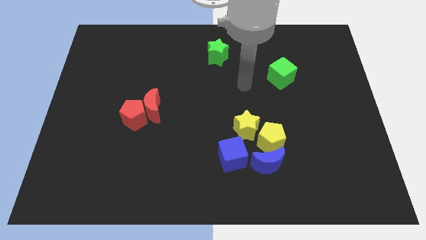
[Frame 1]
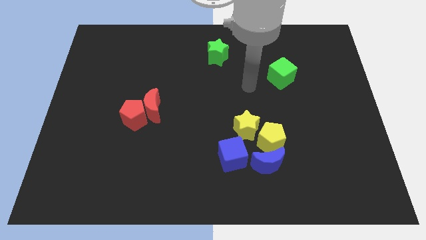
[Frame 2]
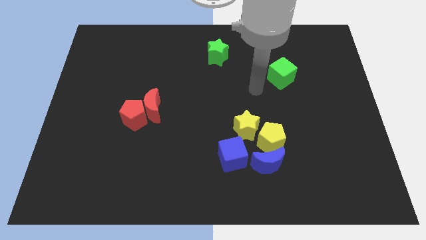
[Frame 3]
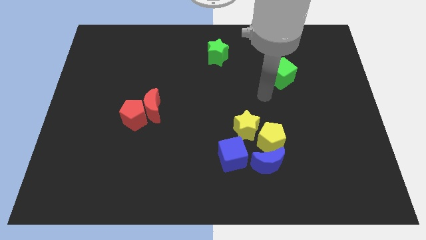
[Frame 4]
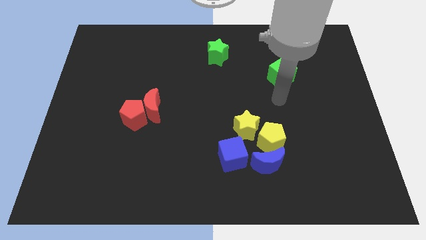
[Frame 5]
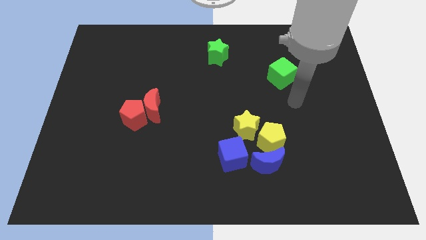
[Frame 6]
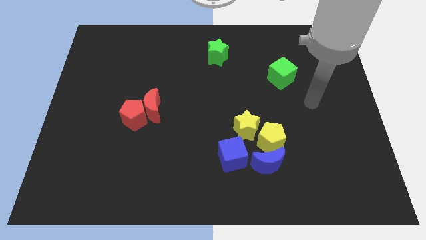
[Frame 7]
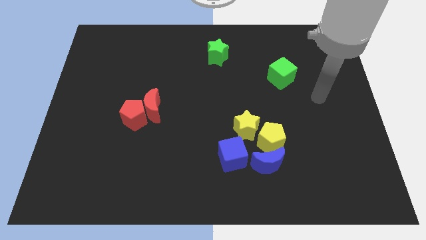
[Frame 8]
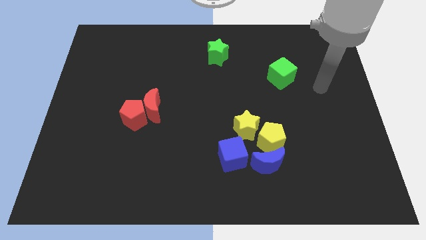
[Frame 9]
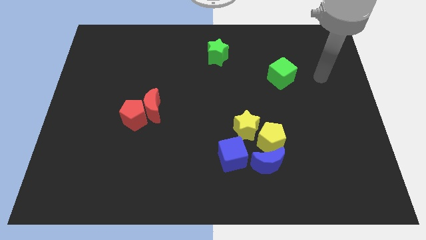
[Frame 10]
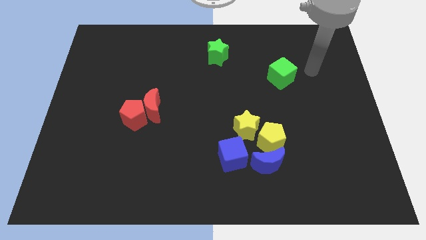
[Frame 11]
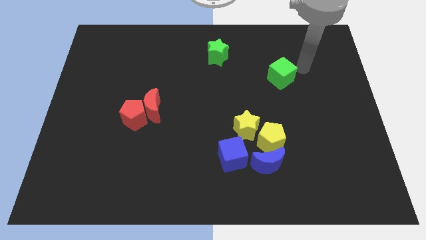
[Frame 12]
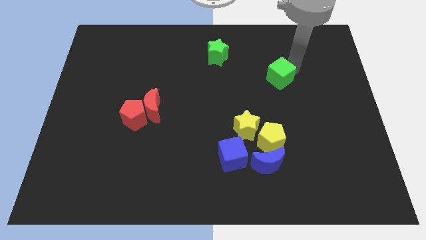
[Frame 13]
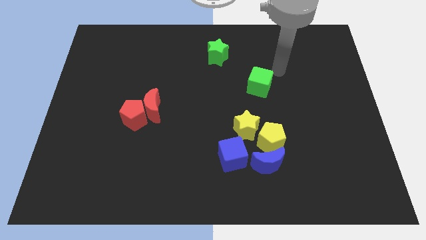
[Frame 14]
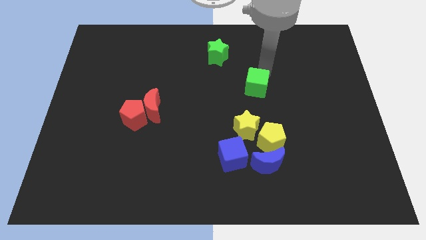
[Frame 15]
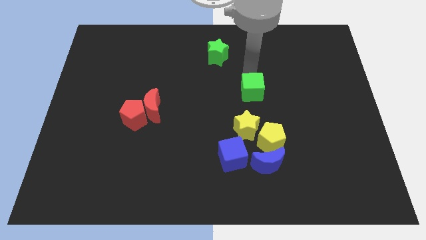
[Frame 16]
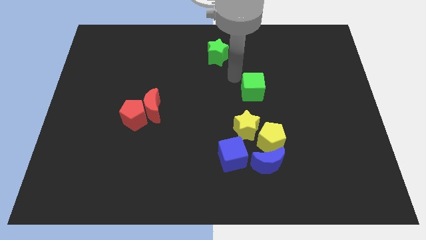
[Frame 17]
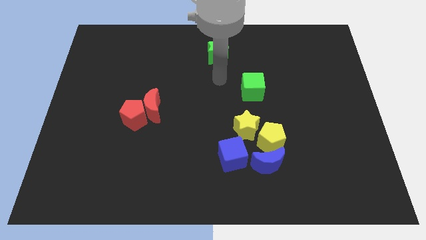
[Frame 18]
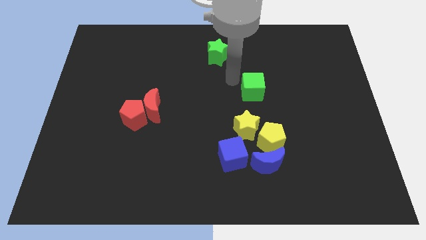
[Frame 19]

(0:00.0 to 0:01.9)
put the green cube above the yellow star

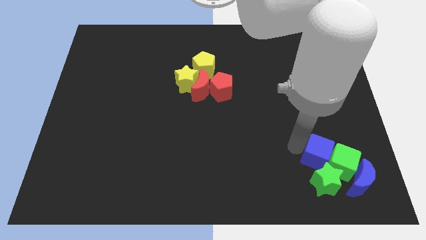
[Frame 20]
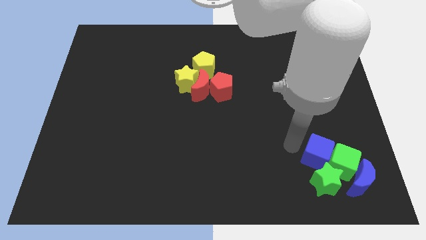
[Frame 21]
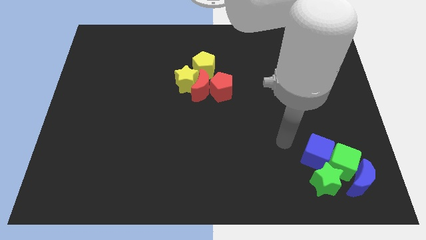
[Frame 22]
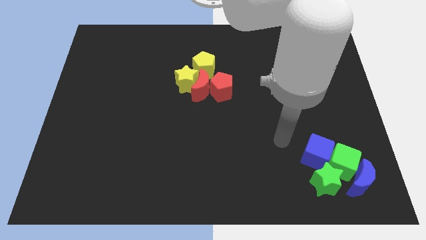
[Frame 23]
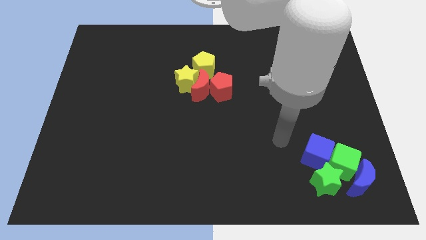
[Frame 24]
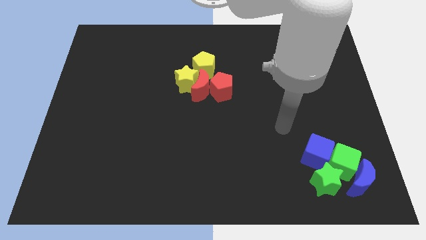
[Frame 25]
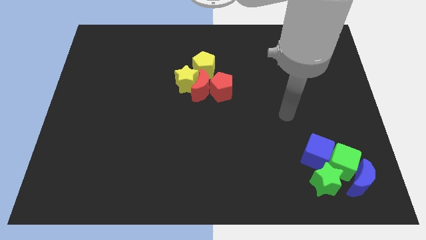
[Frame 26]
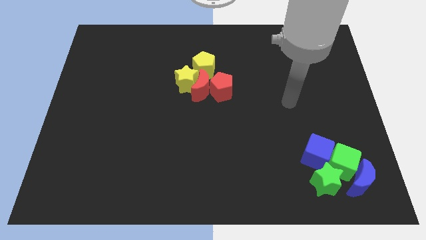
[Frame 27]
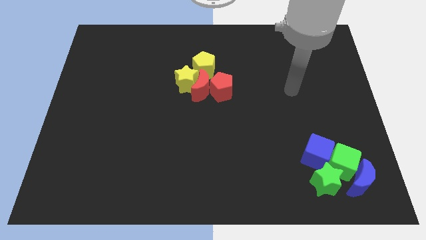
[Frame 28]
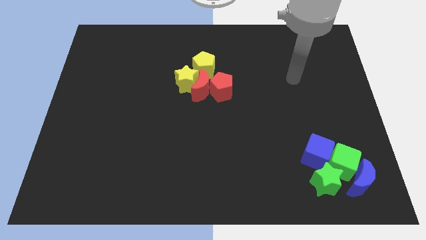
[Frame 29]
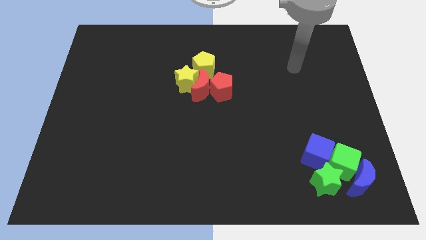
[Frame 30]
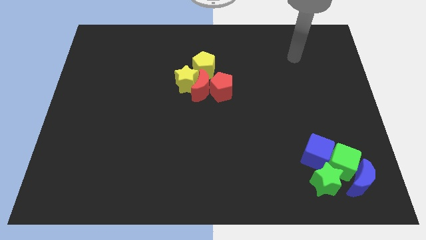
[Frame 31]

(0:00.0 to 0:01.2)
push your arm at the top right side

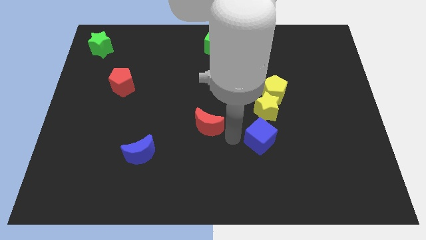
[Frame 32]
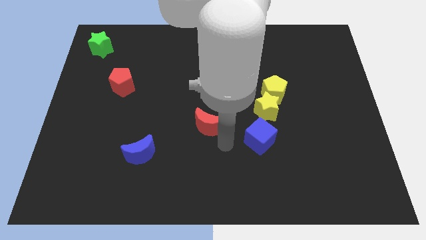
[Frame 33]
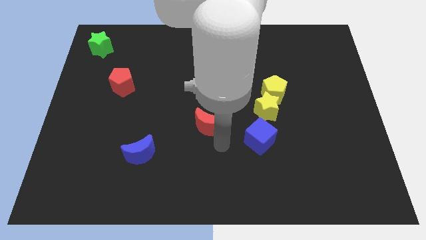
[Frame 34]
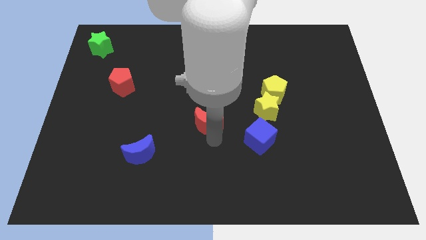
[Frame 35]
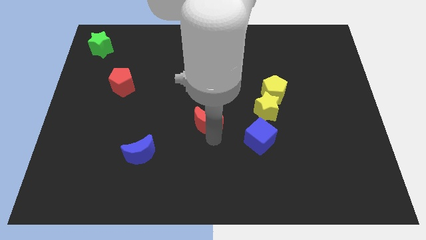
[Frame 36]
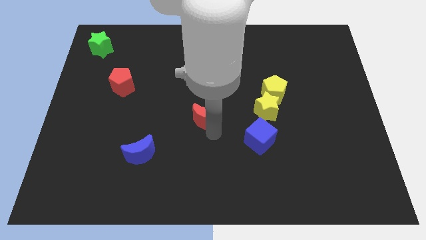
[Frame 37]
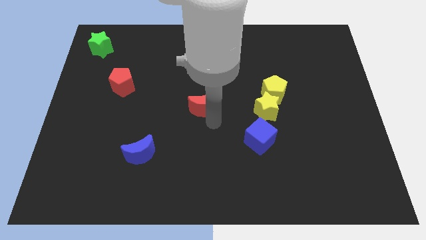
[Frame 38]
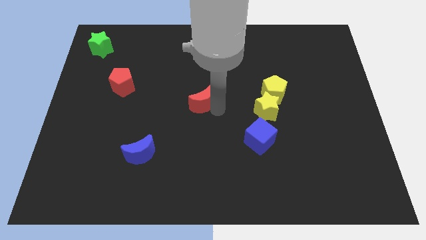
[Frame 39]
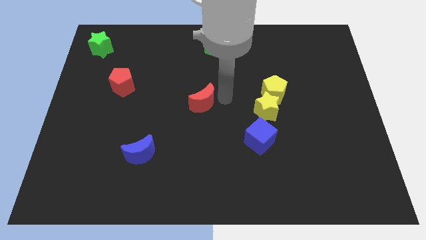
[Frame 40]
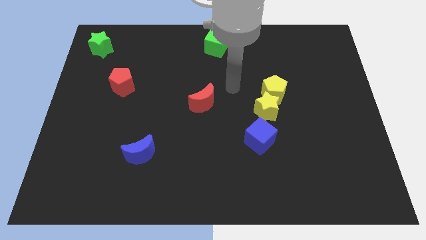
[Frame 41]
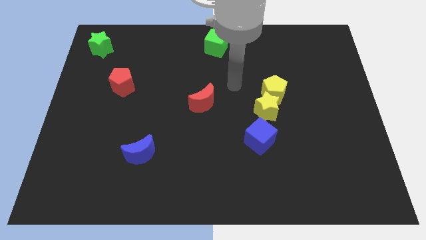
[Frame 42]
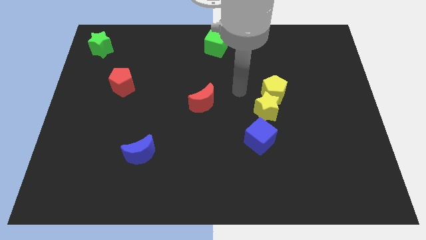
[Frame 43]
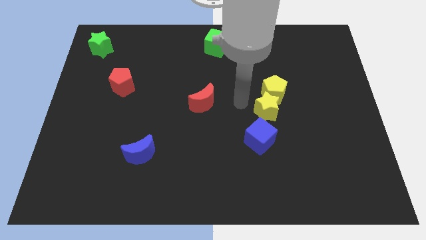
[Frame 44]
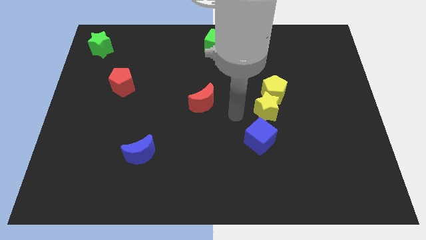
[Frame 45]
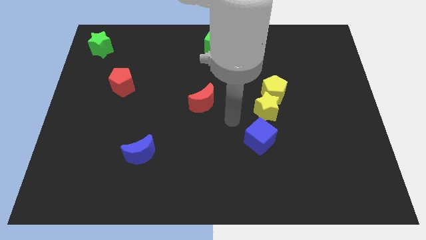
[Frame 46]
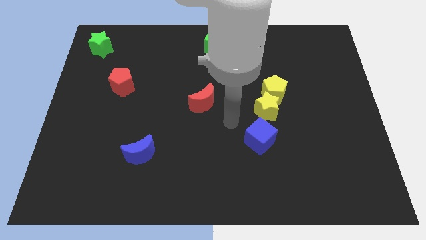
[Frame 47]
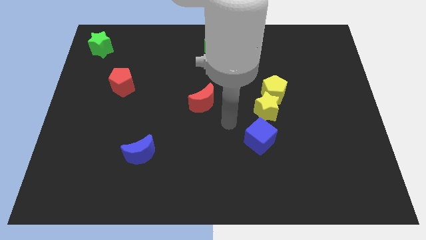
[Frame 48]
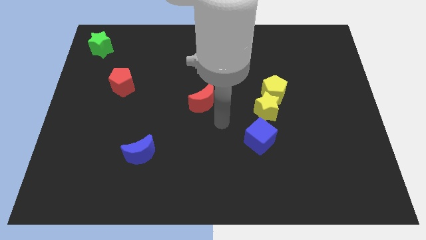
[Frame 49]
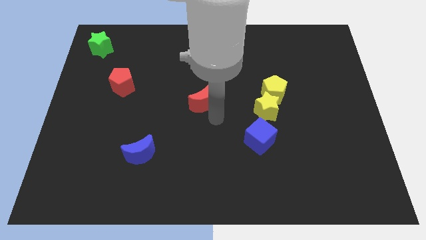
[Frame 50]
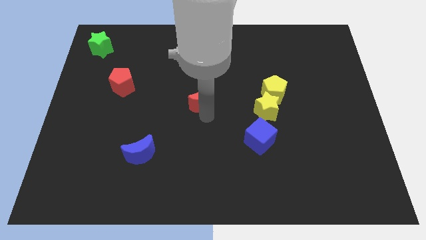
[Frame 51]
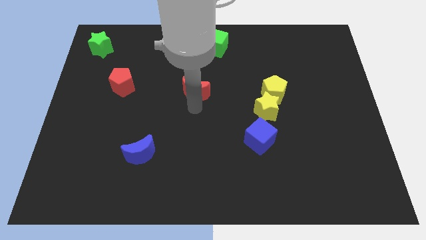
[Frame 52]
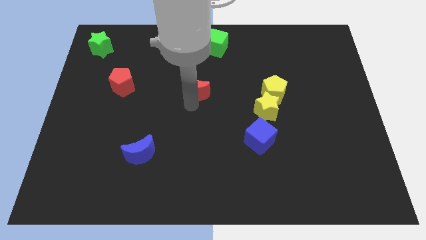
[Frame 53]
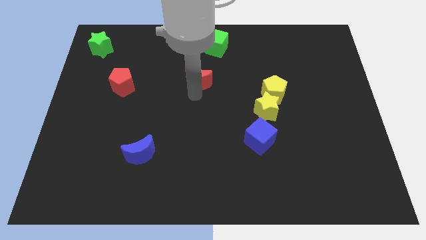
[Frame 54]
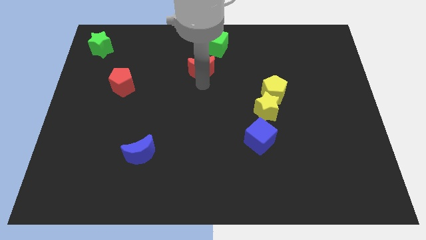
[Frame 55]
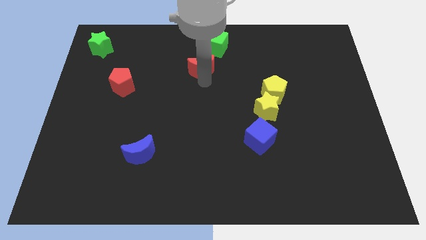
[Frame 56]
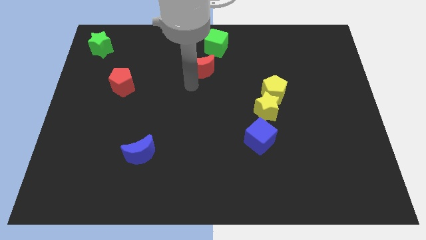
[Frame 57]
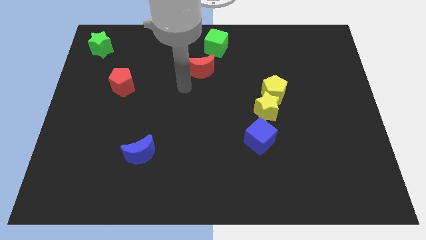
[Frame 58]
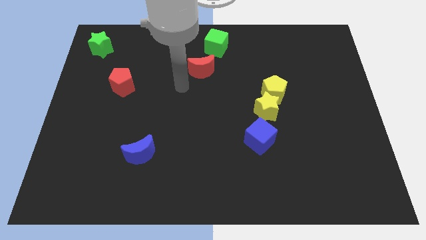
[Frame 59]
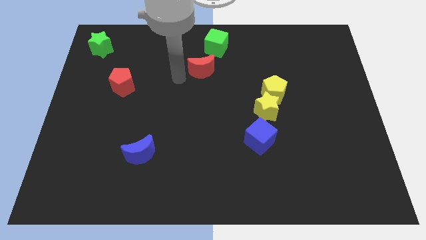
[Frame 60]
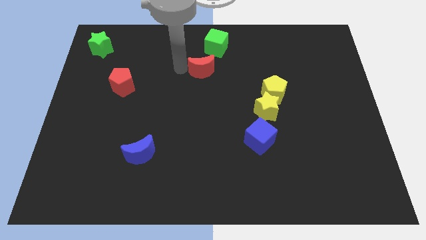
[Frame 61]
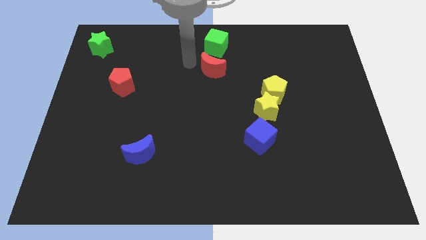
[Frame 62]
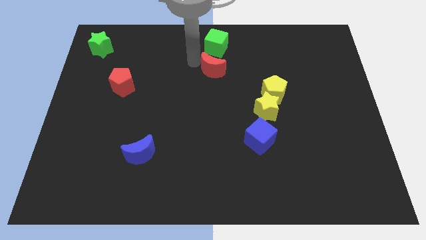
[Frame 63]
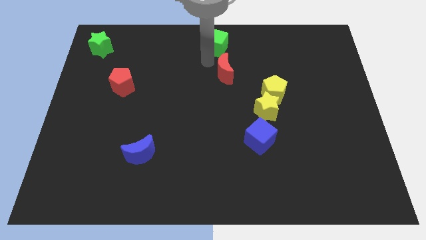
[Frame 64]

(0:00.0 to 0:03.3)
place the red moon at the bottom right side of green cube

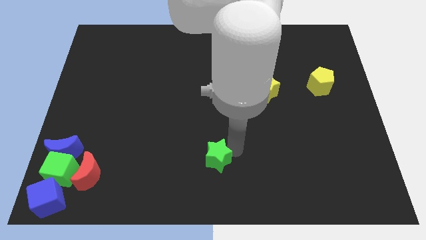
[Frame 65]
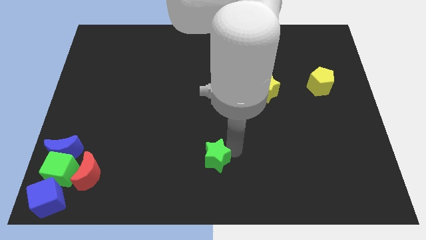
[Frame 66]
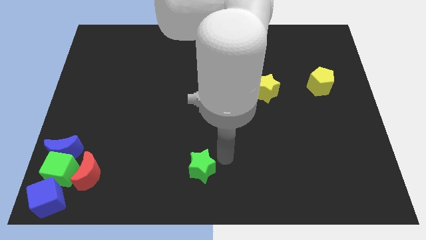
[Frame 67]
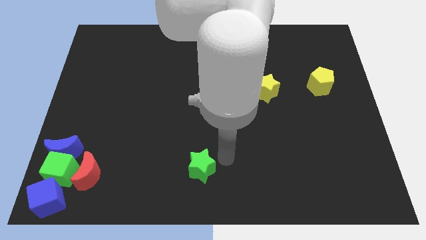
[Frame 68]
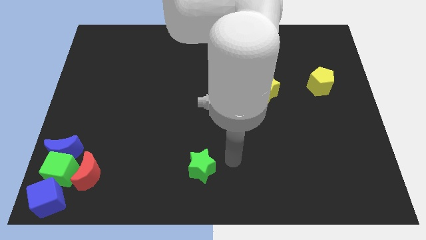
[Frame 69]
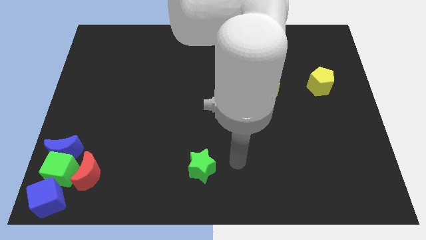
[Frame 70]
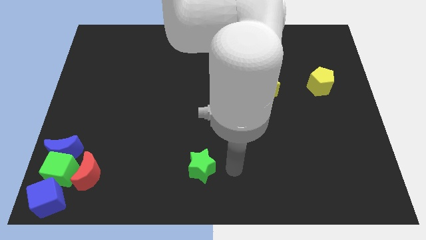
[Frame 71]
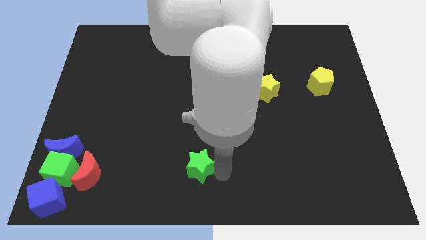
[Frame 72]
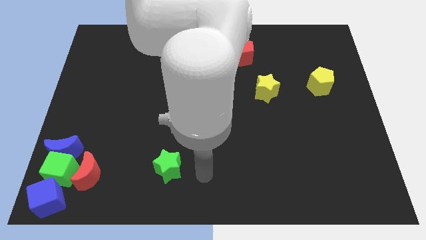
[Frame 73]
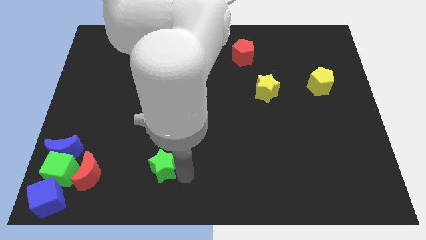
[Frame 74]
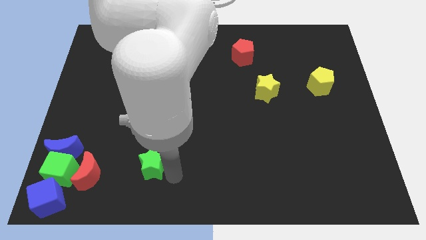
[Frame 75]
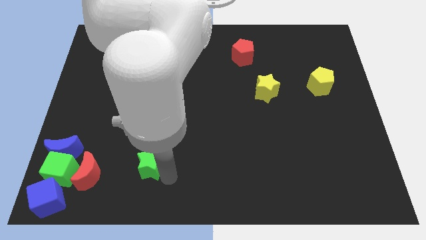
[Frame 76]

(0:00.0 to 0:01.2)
push the green star towards the left side of the board

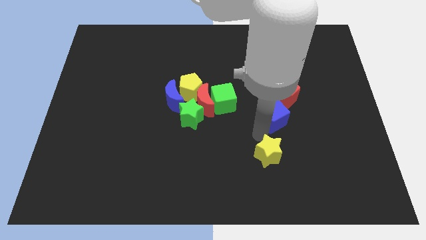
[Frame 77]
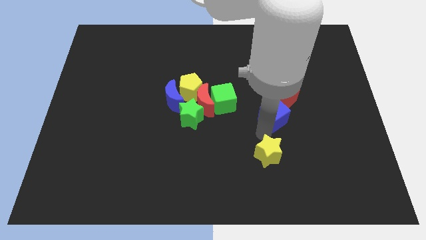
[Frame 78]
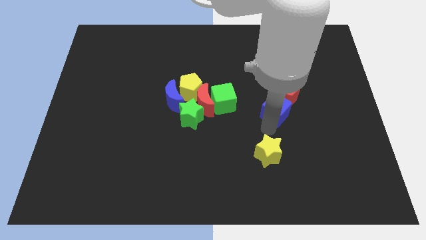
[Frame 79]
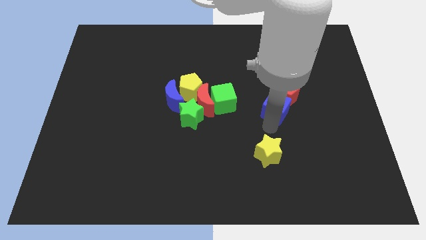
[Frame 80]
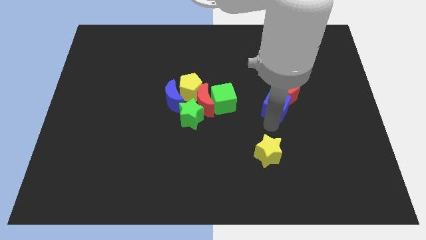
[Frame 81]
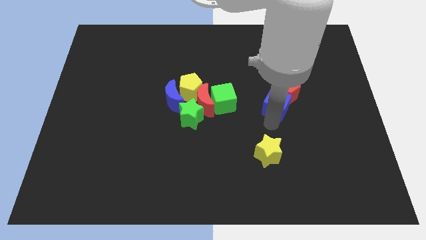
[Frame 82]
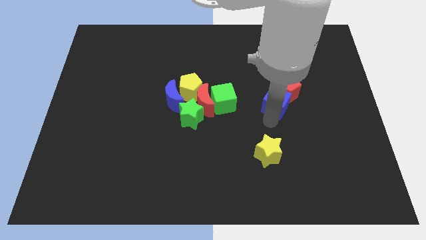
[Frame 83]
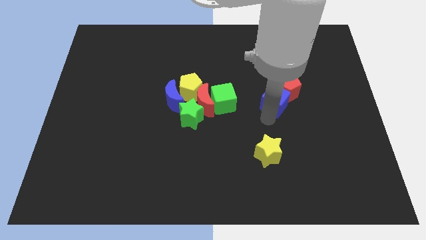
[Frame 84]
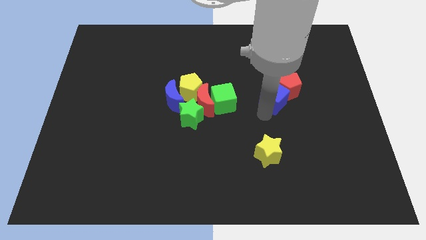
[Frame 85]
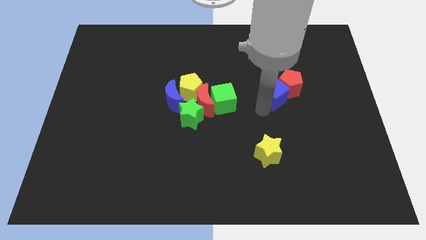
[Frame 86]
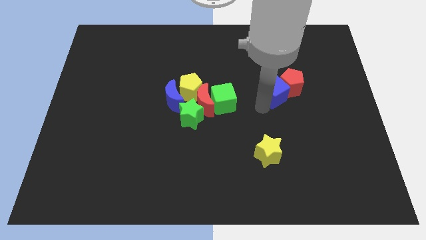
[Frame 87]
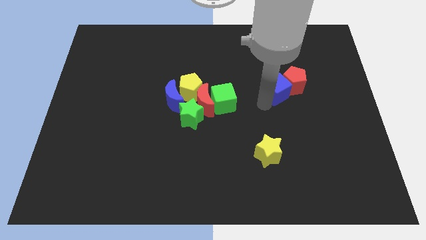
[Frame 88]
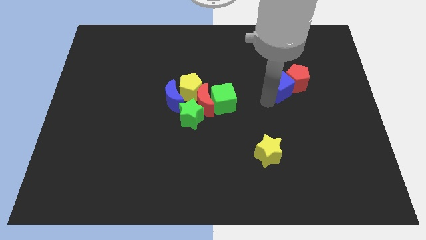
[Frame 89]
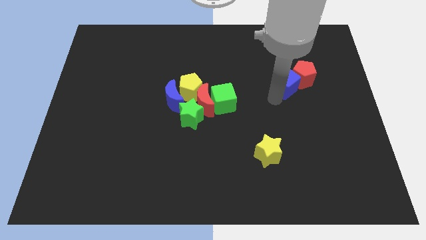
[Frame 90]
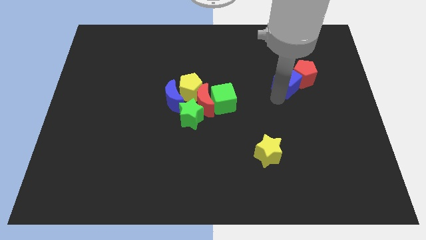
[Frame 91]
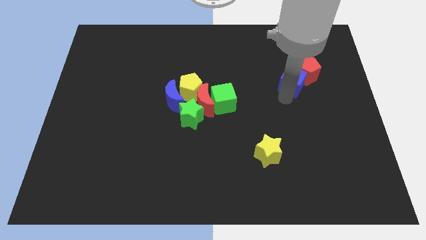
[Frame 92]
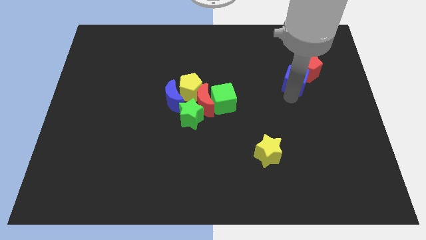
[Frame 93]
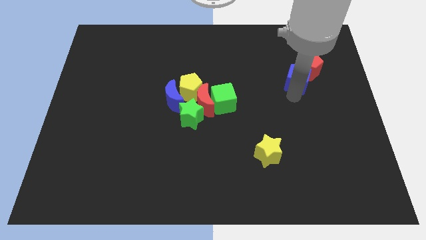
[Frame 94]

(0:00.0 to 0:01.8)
move the blue cube along with red pentagon to the top right side
